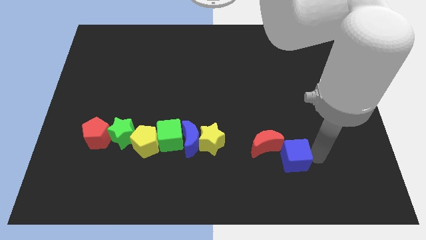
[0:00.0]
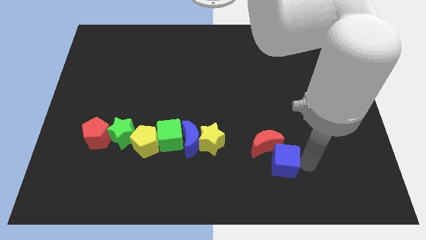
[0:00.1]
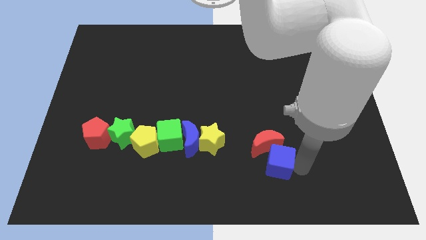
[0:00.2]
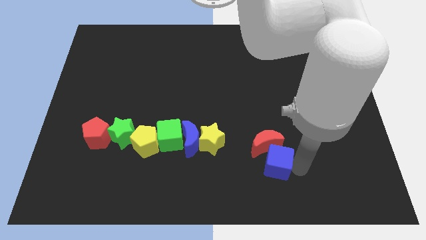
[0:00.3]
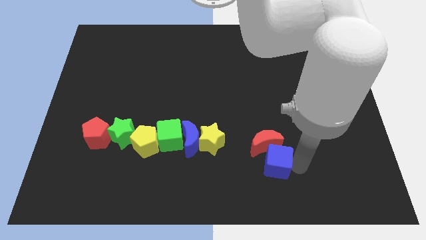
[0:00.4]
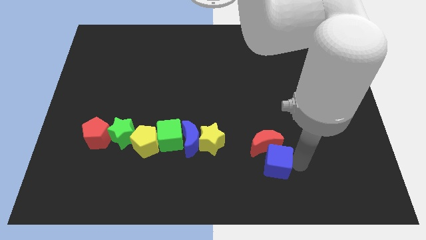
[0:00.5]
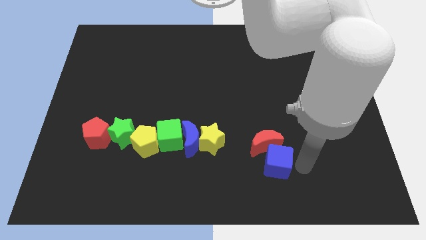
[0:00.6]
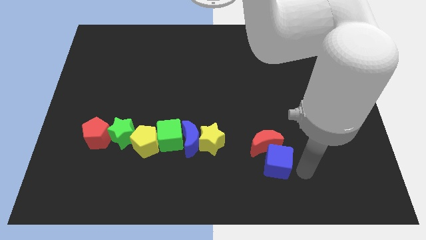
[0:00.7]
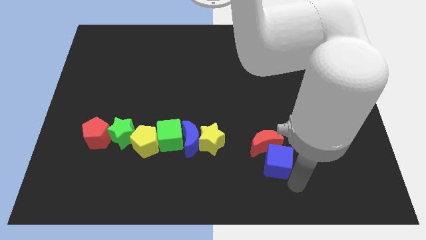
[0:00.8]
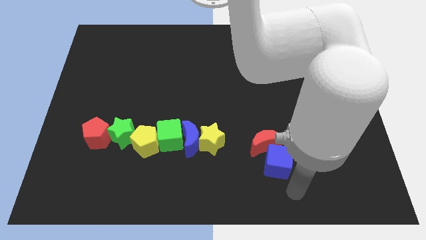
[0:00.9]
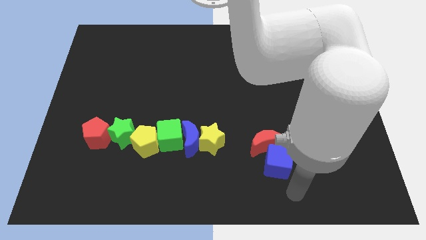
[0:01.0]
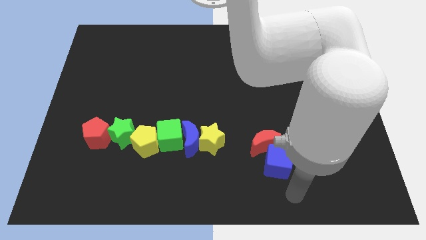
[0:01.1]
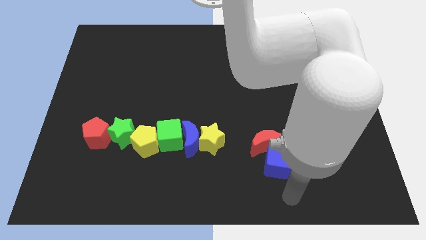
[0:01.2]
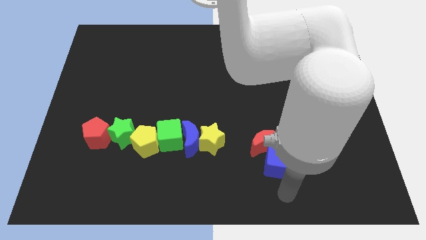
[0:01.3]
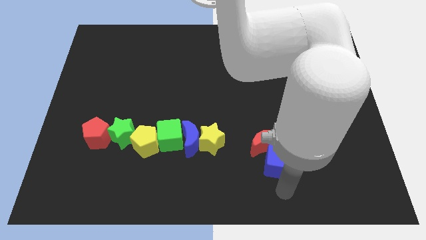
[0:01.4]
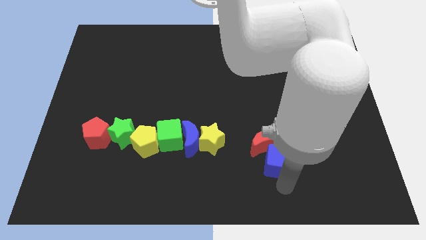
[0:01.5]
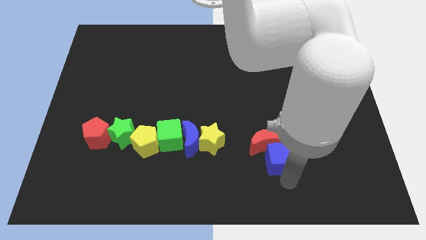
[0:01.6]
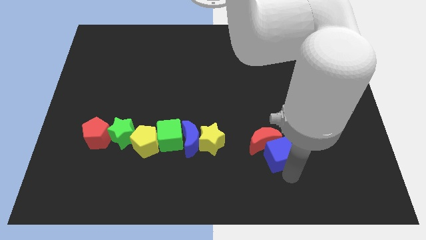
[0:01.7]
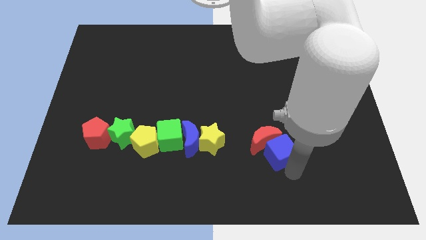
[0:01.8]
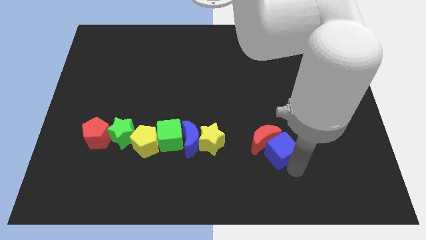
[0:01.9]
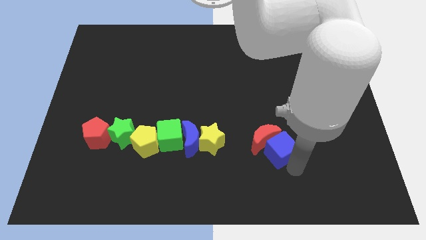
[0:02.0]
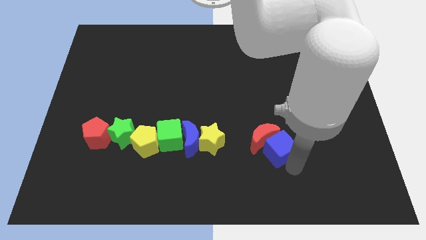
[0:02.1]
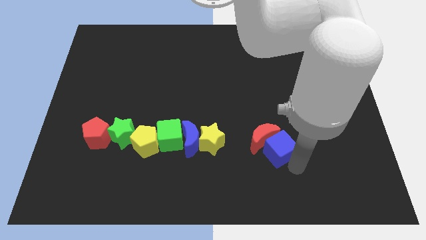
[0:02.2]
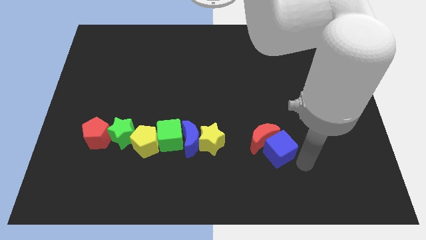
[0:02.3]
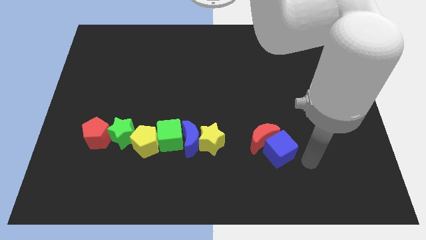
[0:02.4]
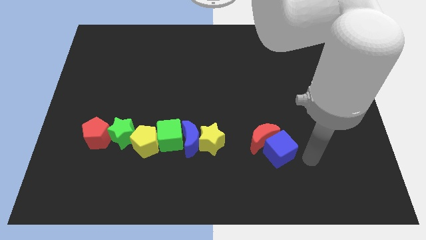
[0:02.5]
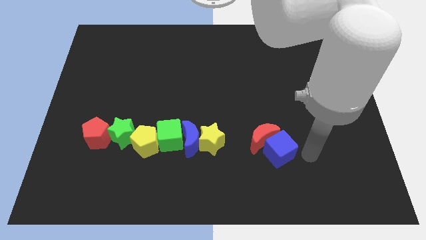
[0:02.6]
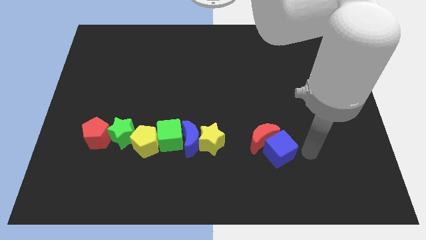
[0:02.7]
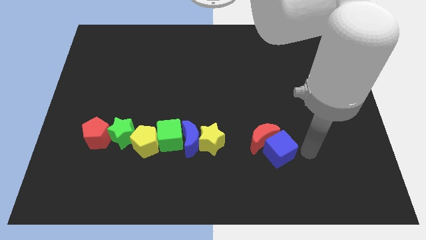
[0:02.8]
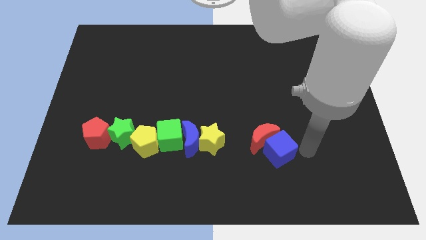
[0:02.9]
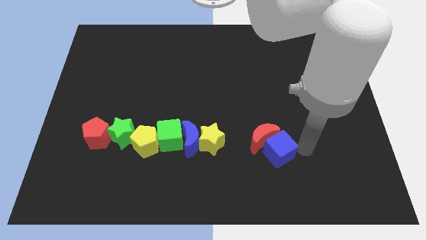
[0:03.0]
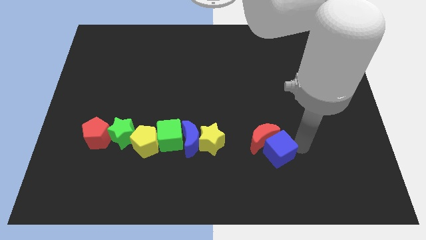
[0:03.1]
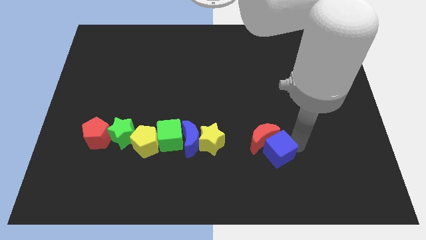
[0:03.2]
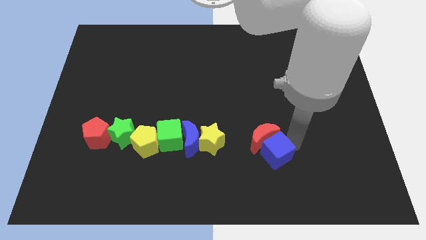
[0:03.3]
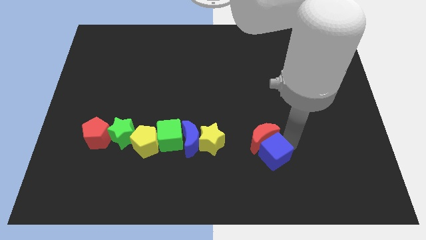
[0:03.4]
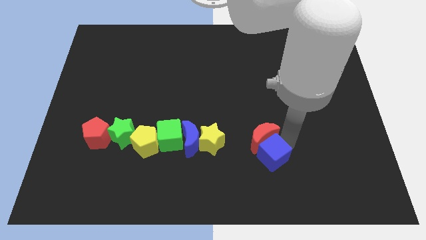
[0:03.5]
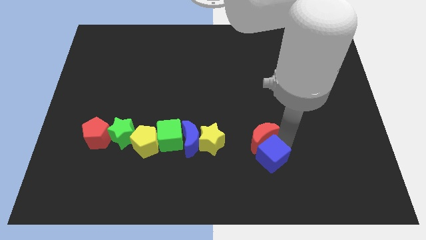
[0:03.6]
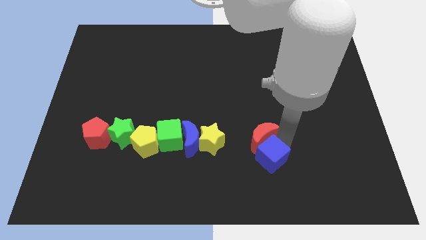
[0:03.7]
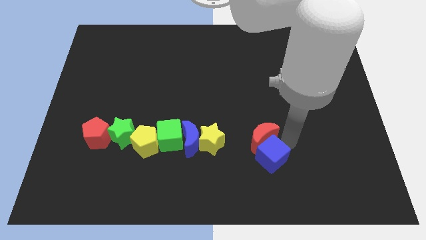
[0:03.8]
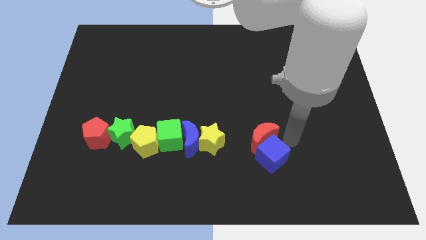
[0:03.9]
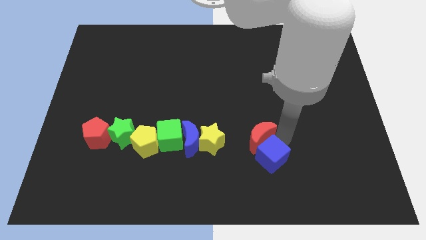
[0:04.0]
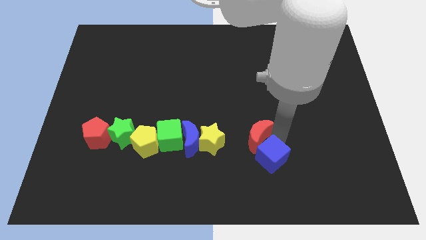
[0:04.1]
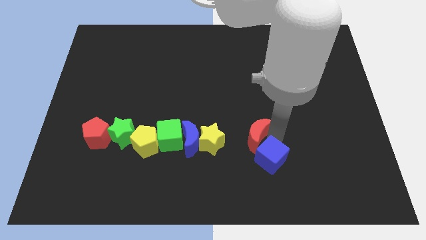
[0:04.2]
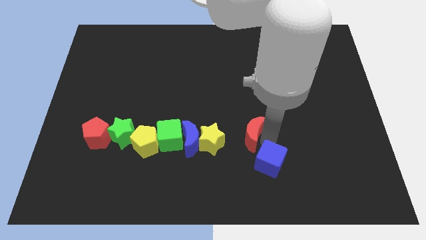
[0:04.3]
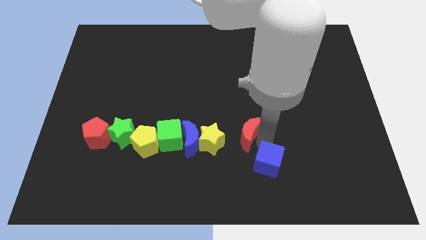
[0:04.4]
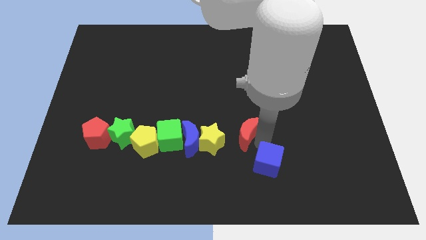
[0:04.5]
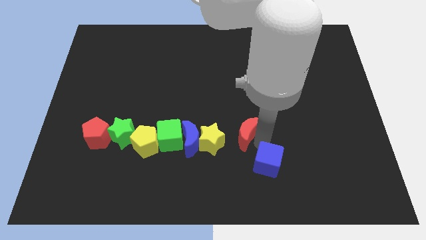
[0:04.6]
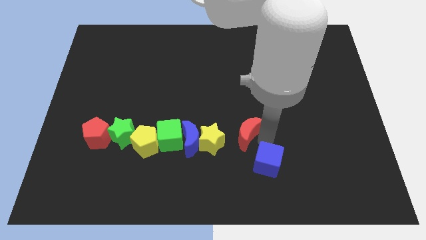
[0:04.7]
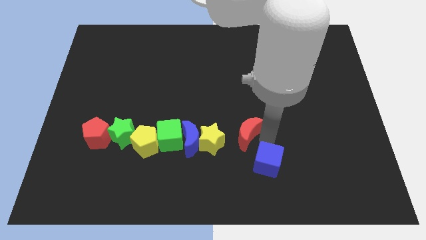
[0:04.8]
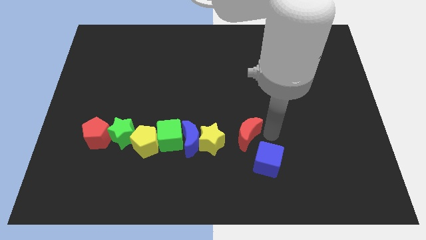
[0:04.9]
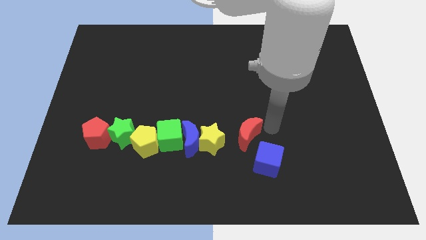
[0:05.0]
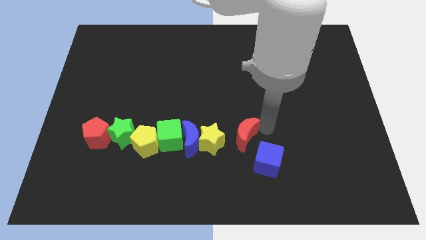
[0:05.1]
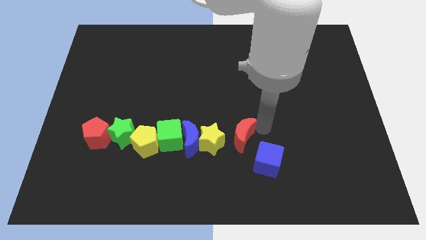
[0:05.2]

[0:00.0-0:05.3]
separate blue cube and the red moon

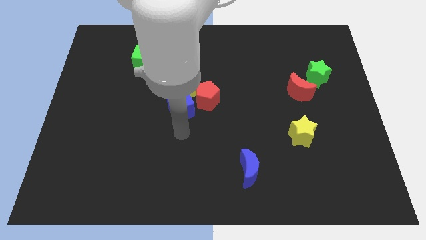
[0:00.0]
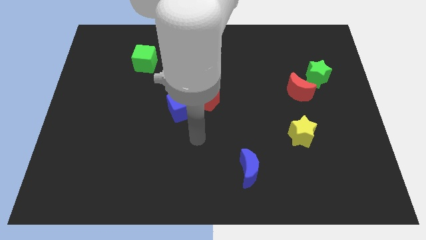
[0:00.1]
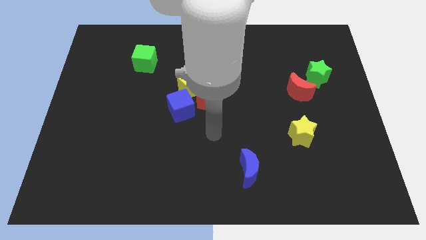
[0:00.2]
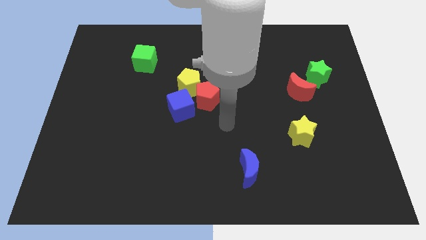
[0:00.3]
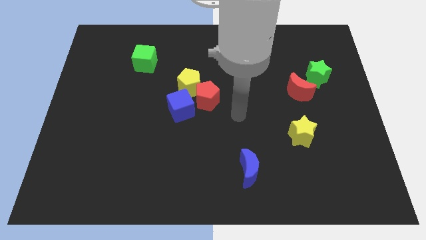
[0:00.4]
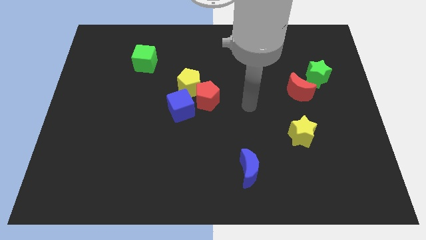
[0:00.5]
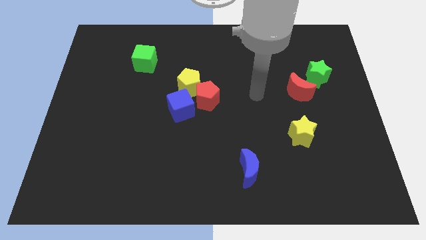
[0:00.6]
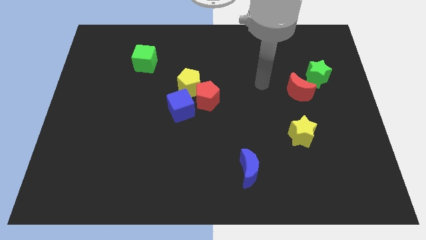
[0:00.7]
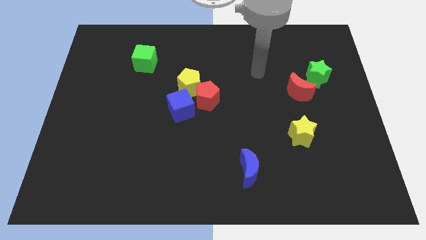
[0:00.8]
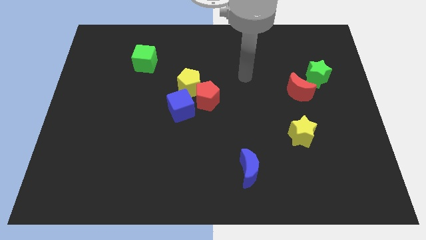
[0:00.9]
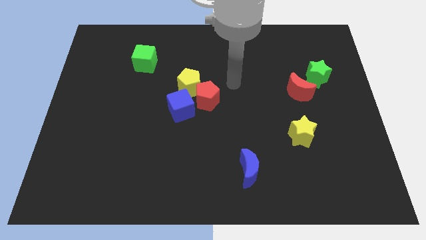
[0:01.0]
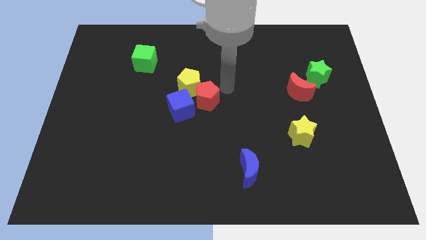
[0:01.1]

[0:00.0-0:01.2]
move your arm away from the blue cube

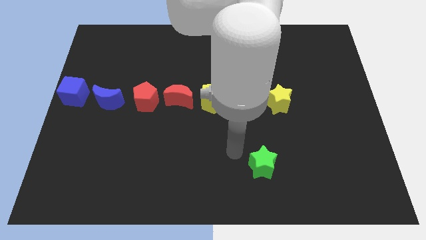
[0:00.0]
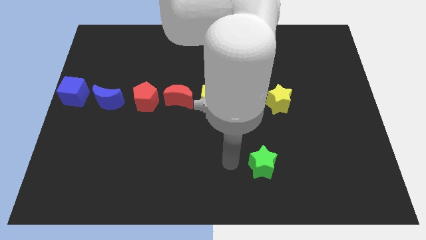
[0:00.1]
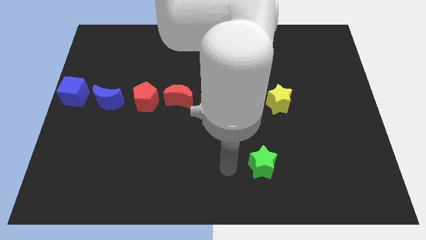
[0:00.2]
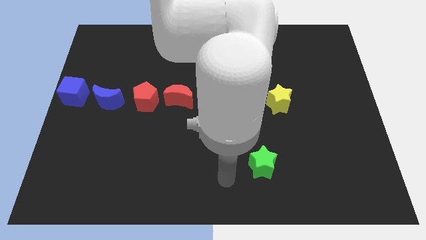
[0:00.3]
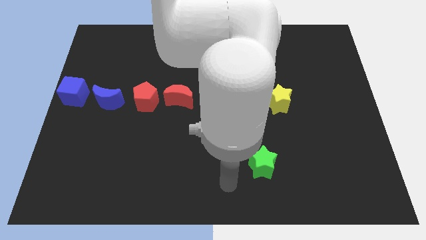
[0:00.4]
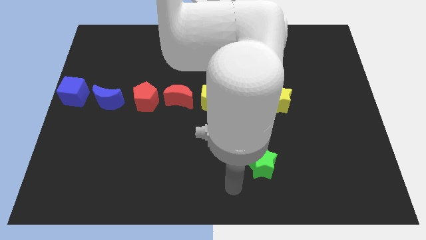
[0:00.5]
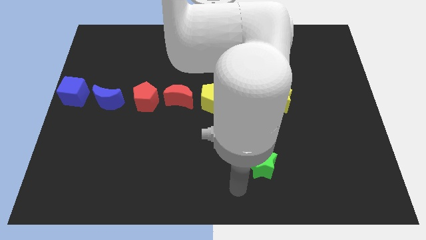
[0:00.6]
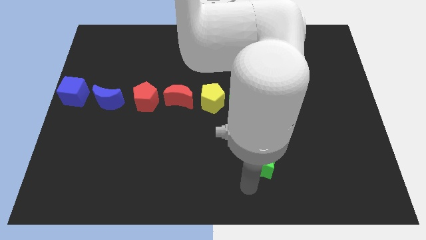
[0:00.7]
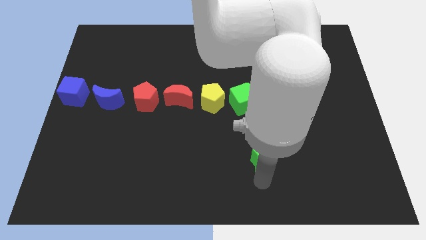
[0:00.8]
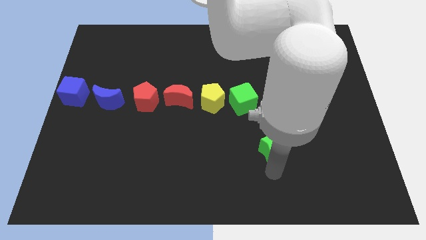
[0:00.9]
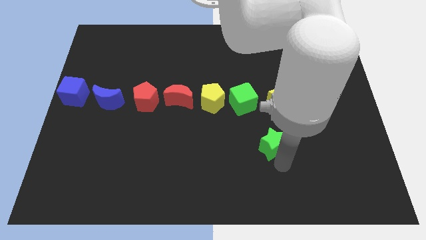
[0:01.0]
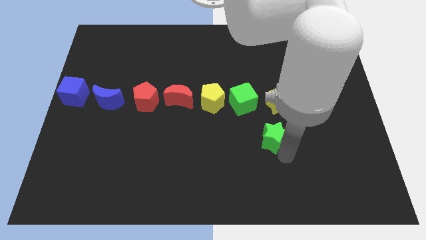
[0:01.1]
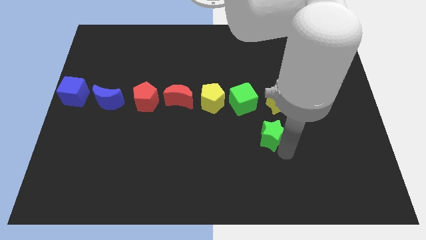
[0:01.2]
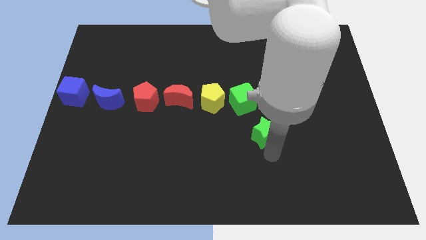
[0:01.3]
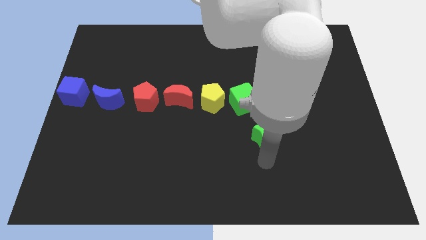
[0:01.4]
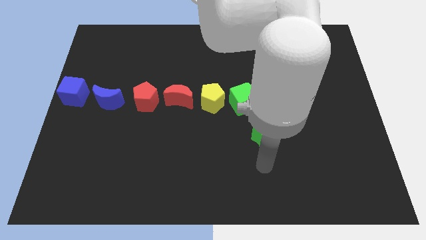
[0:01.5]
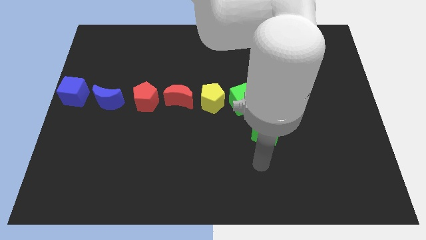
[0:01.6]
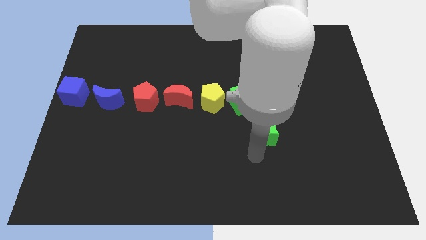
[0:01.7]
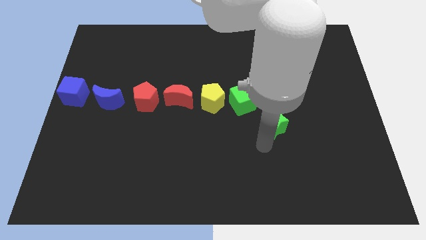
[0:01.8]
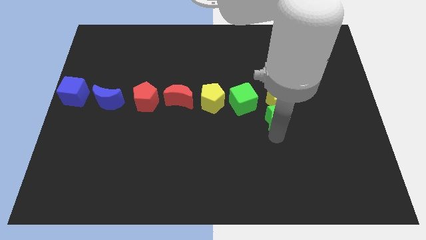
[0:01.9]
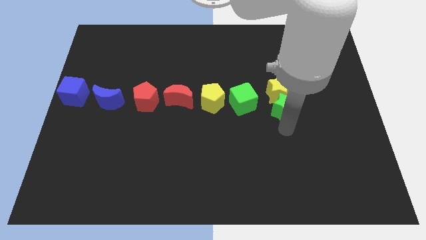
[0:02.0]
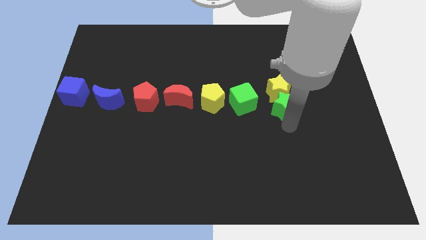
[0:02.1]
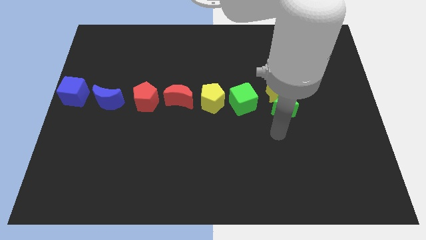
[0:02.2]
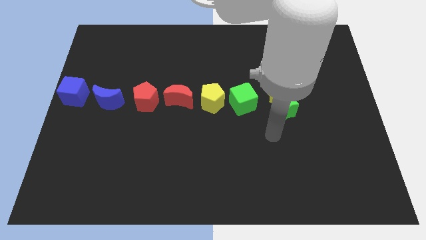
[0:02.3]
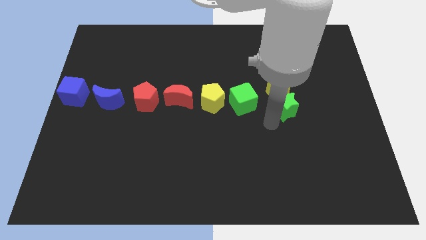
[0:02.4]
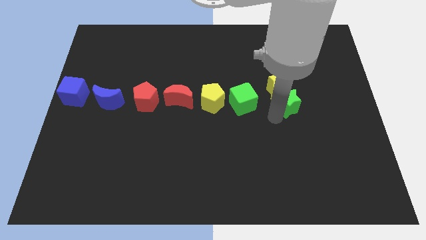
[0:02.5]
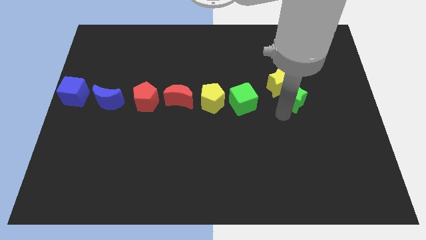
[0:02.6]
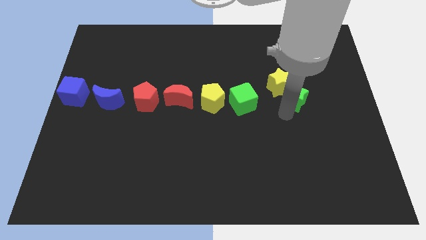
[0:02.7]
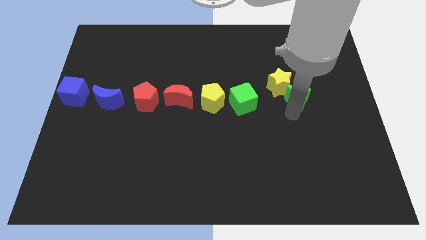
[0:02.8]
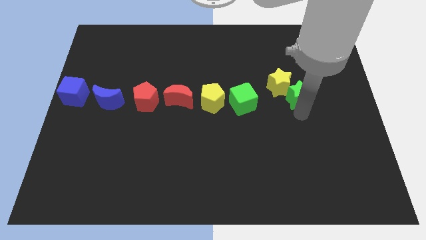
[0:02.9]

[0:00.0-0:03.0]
put the green star at the bottom right of the yellow star
